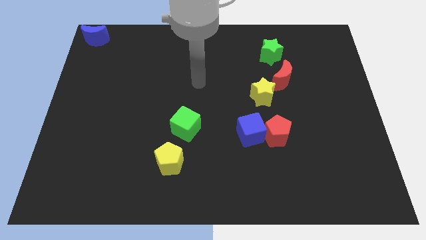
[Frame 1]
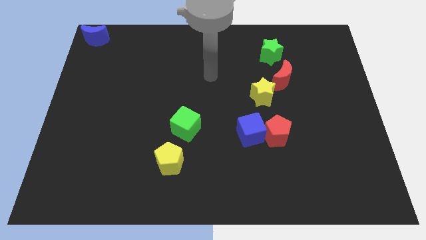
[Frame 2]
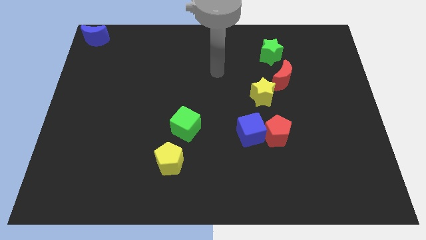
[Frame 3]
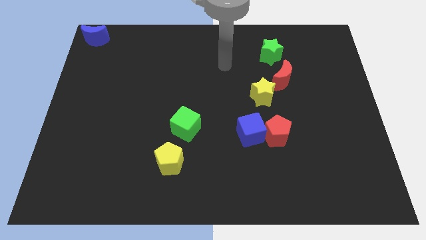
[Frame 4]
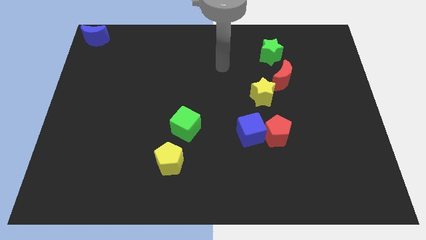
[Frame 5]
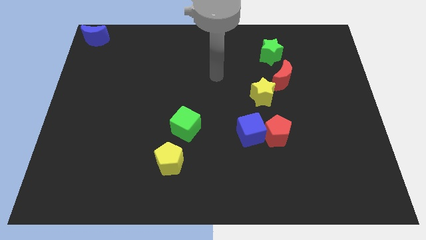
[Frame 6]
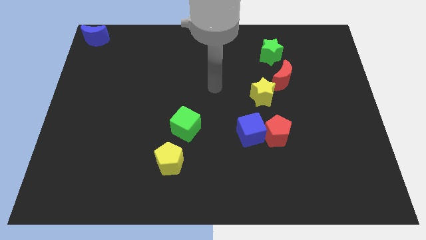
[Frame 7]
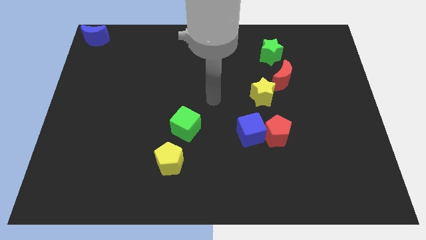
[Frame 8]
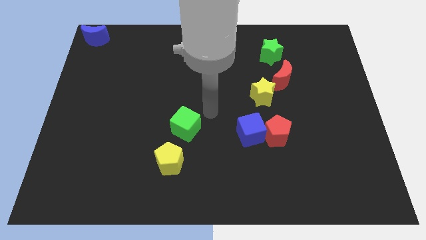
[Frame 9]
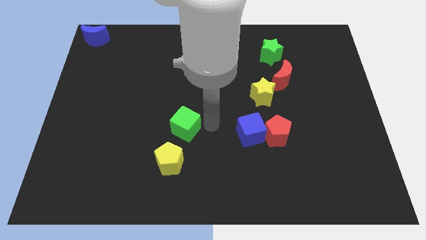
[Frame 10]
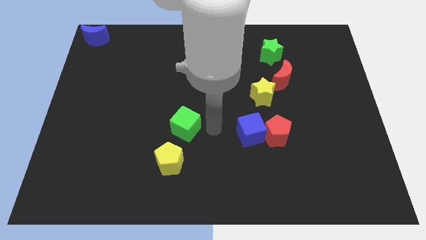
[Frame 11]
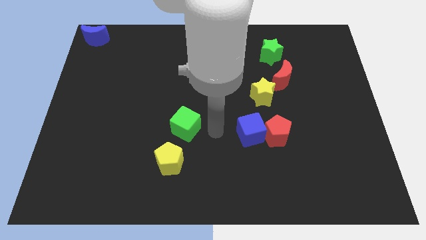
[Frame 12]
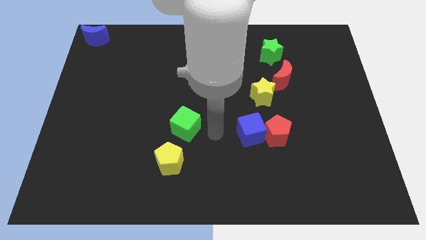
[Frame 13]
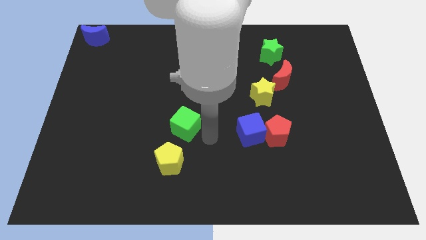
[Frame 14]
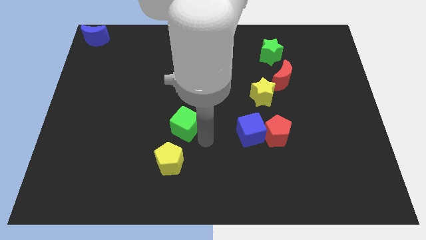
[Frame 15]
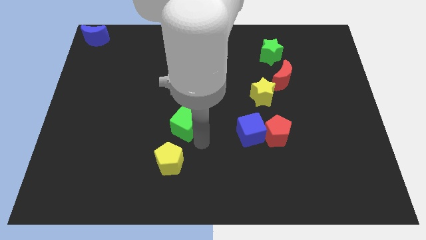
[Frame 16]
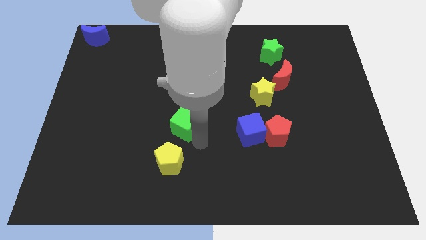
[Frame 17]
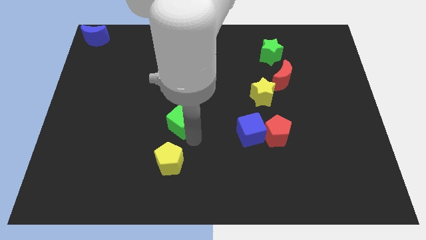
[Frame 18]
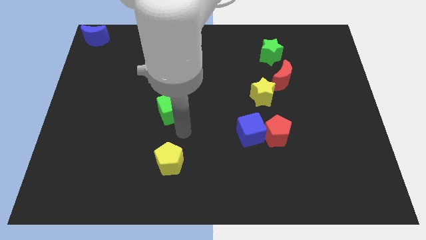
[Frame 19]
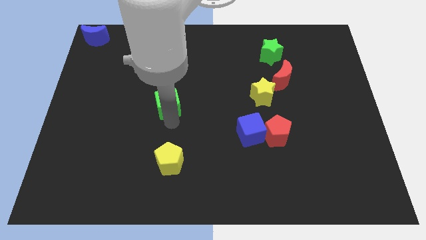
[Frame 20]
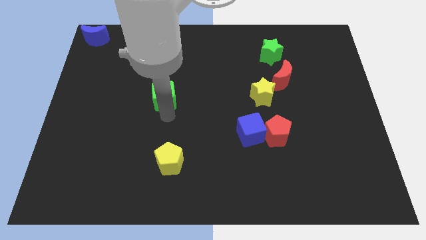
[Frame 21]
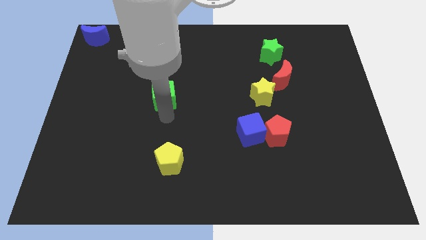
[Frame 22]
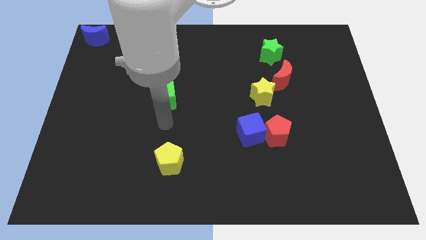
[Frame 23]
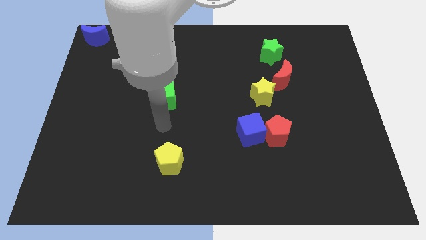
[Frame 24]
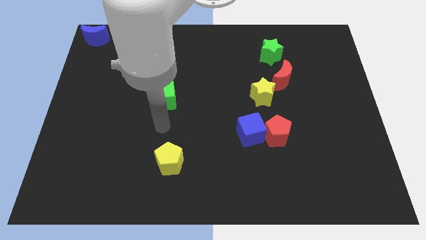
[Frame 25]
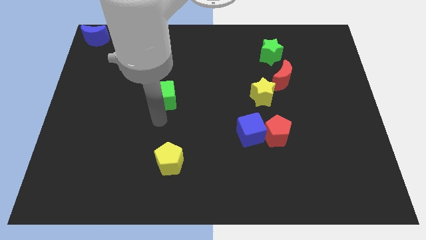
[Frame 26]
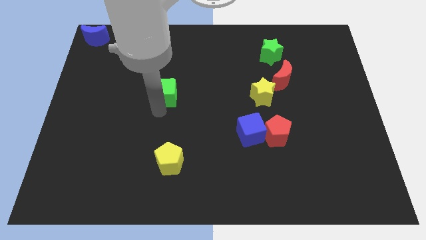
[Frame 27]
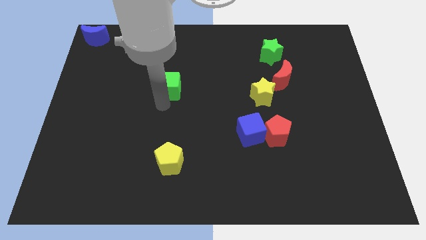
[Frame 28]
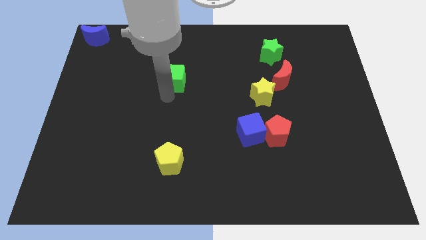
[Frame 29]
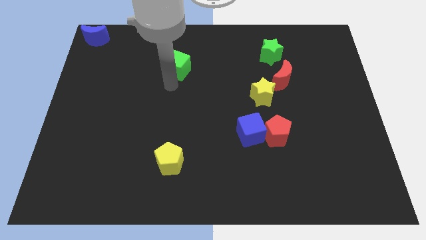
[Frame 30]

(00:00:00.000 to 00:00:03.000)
push the green cube to the top of the yellow pentagon

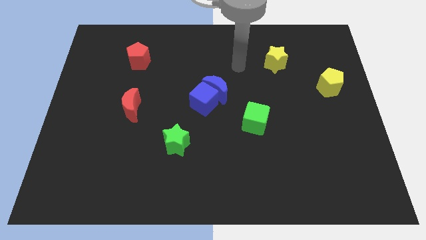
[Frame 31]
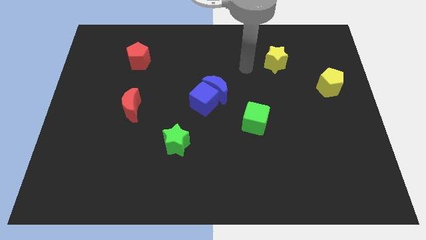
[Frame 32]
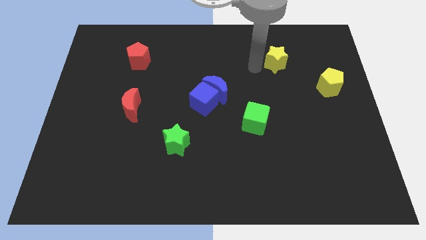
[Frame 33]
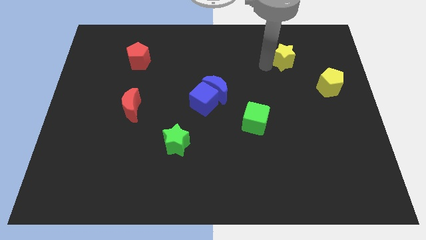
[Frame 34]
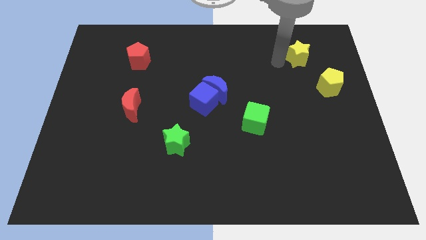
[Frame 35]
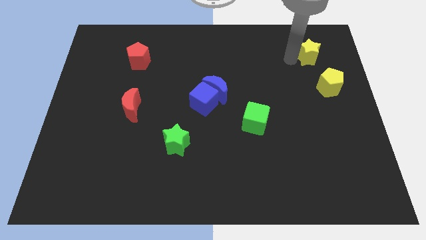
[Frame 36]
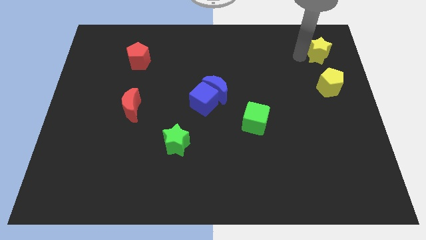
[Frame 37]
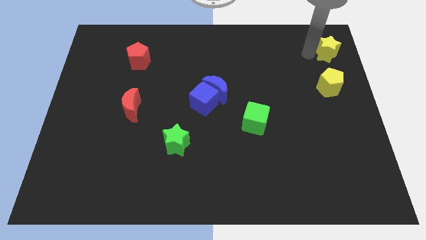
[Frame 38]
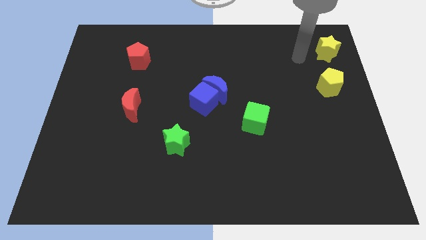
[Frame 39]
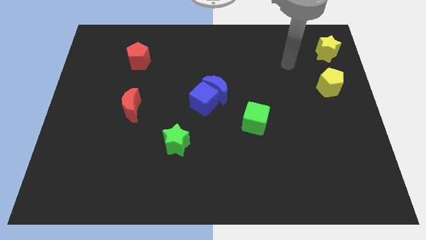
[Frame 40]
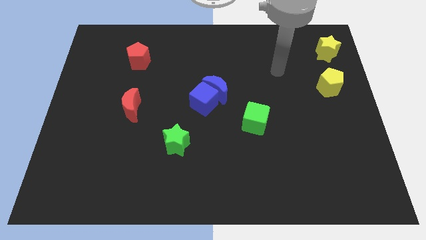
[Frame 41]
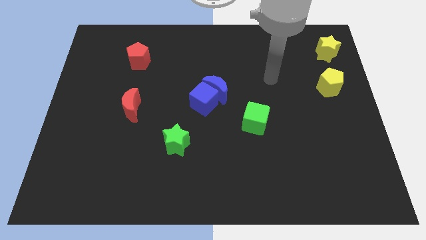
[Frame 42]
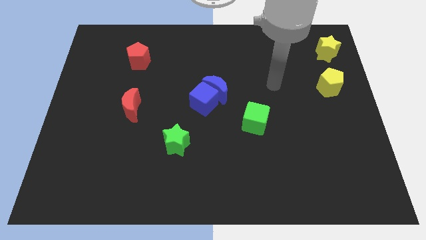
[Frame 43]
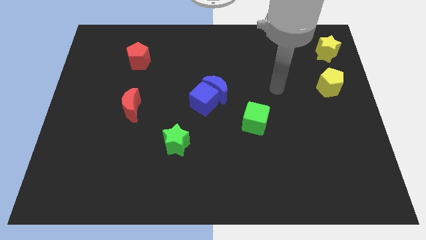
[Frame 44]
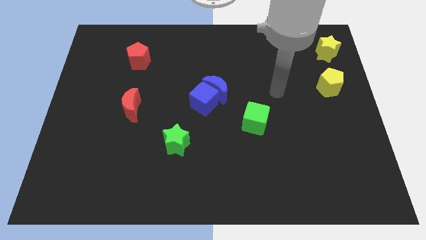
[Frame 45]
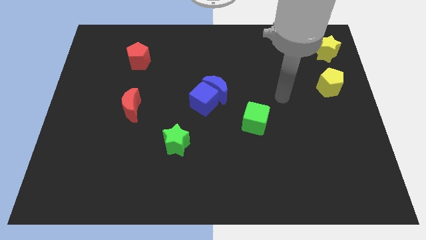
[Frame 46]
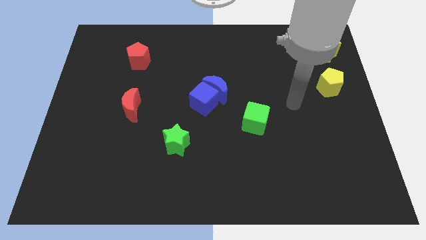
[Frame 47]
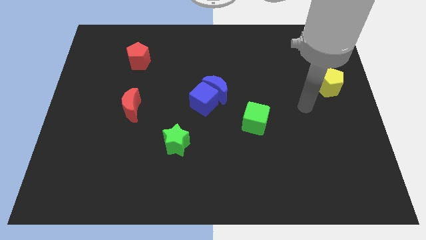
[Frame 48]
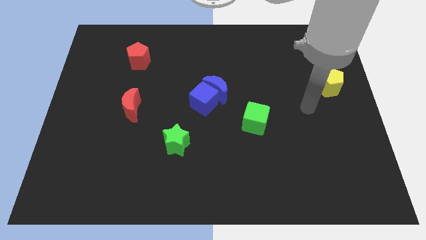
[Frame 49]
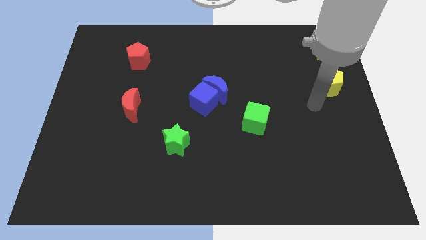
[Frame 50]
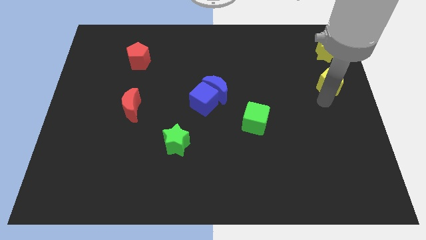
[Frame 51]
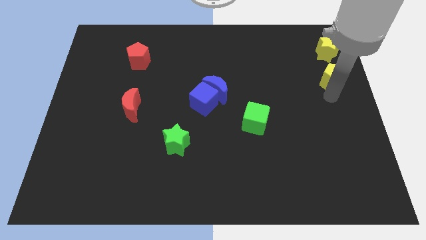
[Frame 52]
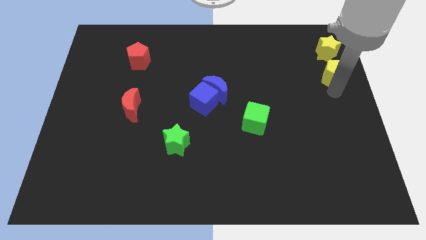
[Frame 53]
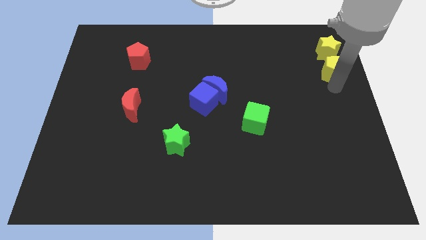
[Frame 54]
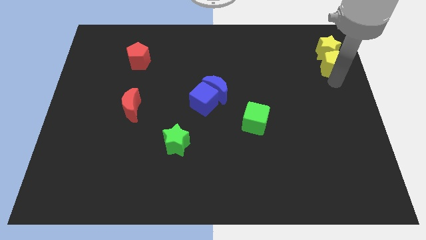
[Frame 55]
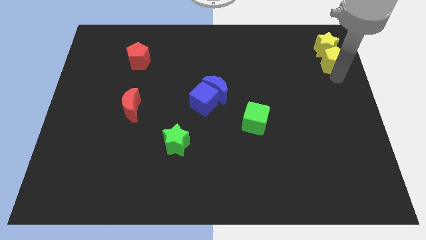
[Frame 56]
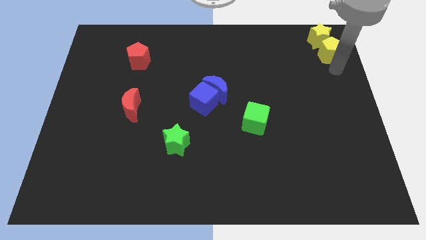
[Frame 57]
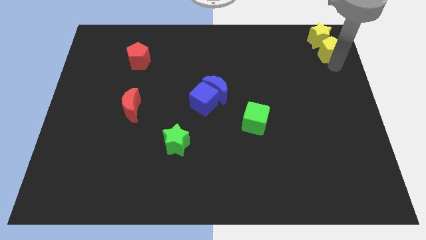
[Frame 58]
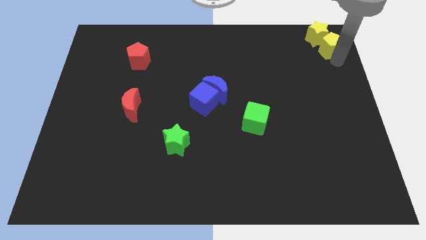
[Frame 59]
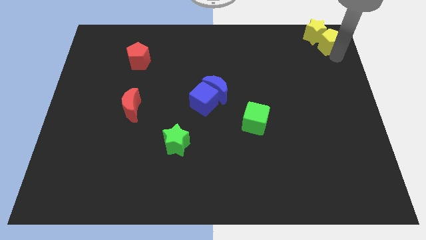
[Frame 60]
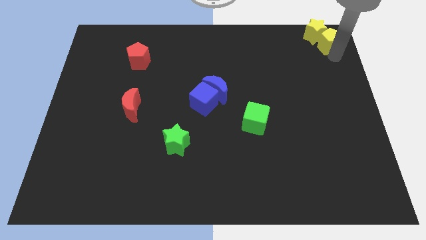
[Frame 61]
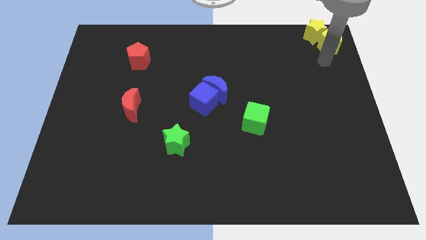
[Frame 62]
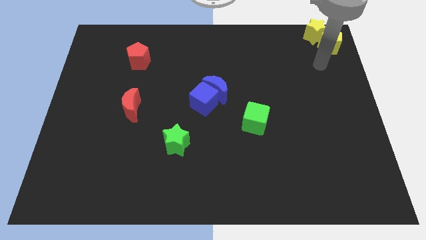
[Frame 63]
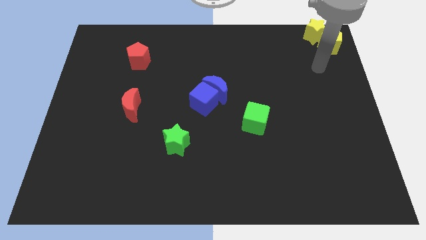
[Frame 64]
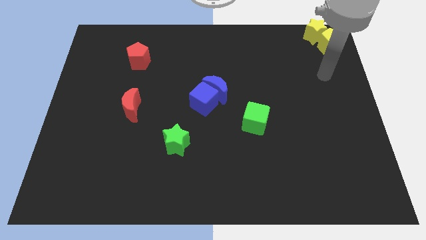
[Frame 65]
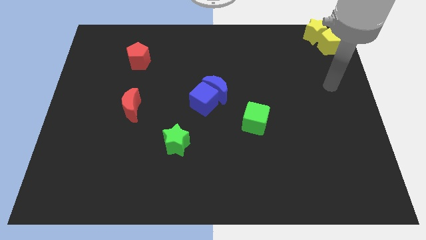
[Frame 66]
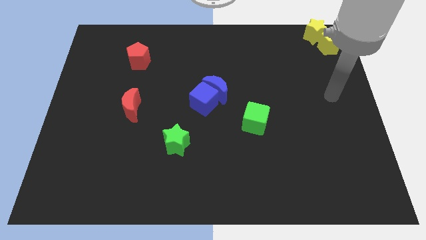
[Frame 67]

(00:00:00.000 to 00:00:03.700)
make the yellow blocks together at the top right corner of the board

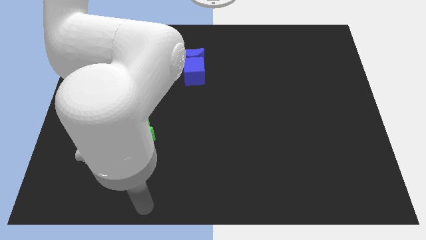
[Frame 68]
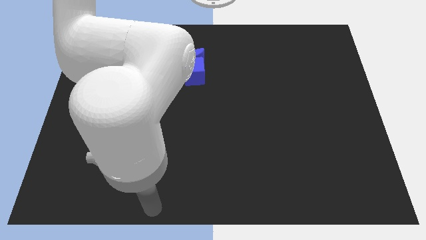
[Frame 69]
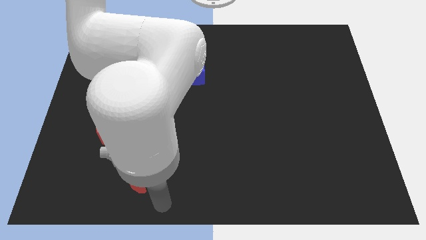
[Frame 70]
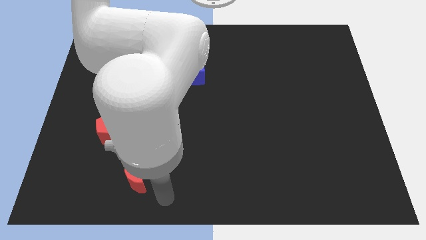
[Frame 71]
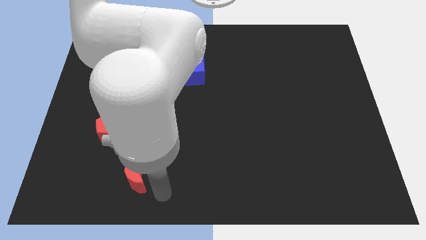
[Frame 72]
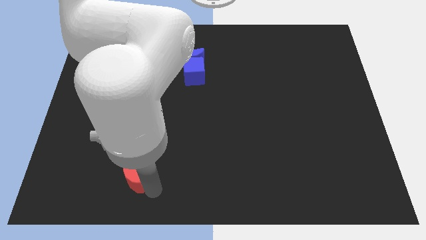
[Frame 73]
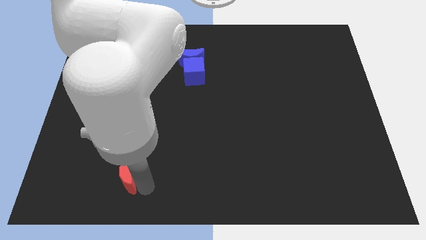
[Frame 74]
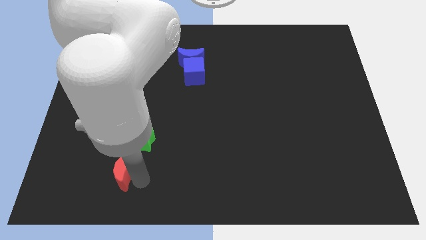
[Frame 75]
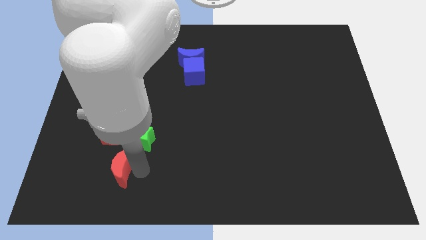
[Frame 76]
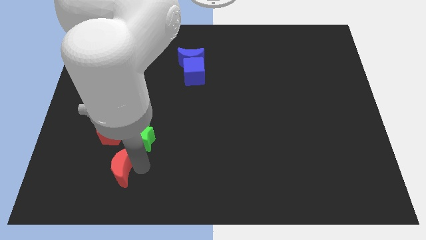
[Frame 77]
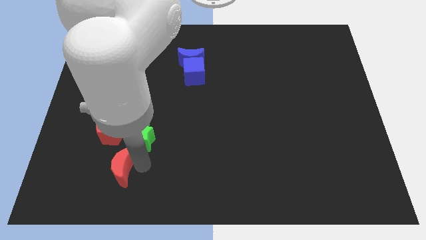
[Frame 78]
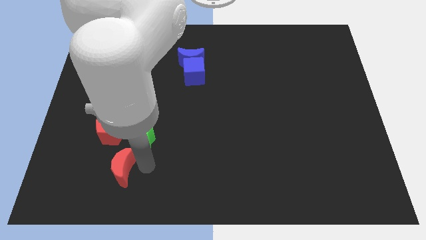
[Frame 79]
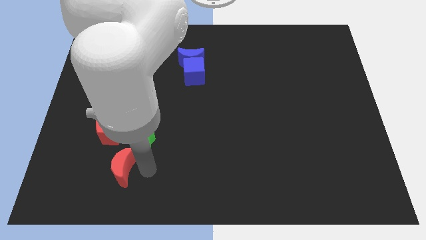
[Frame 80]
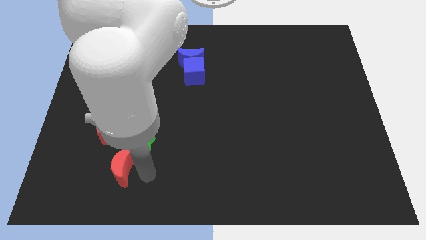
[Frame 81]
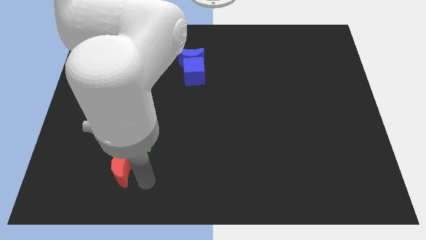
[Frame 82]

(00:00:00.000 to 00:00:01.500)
place the red crescent below the green star

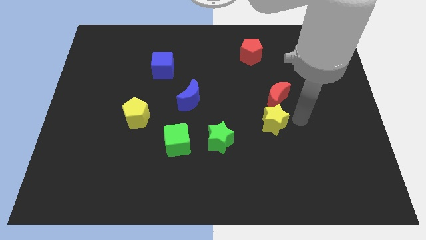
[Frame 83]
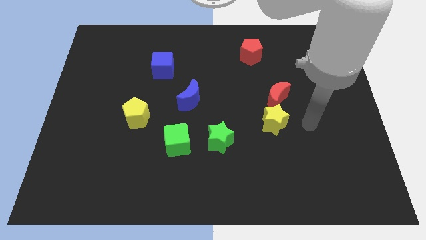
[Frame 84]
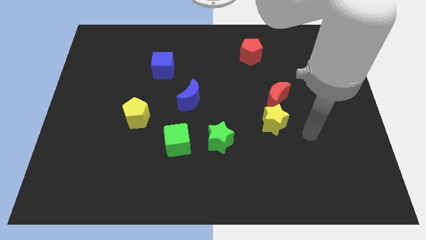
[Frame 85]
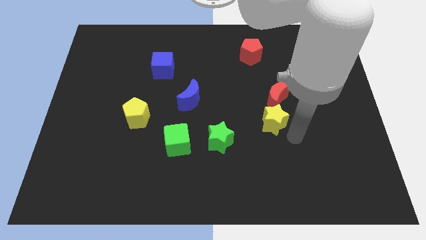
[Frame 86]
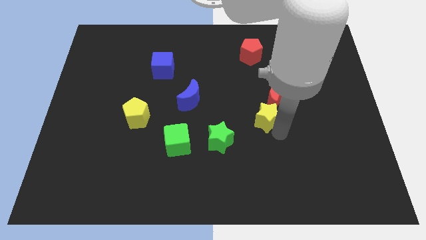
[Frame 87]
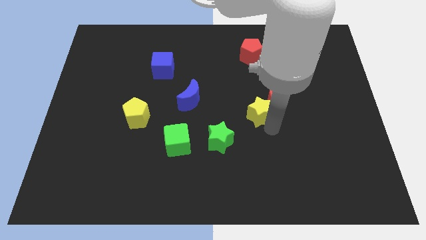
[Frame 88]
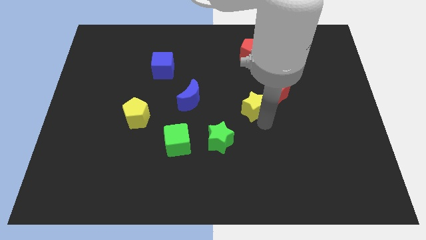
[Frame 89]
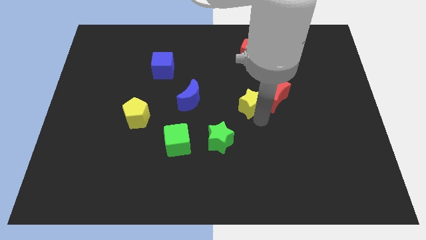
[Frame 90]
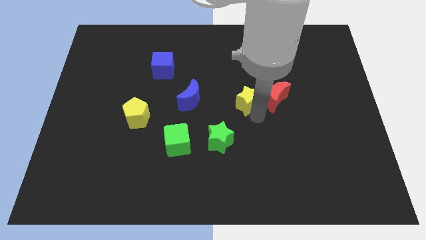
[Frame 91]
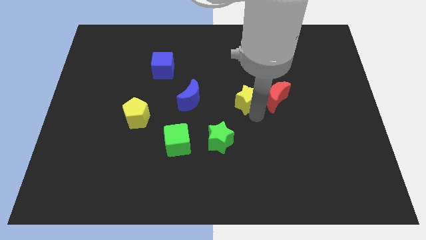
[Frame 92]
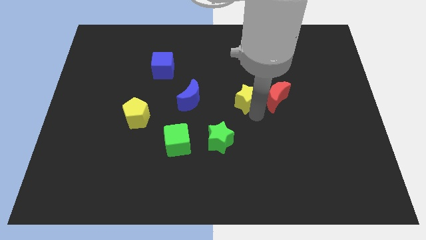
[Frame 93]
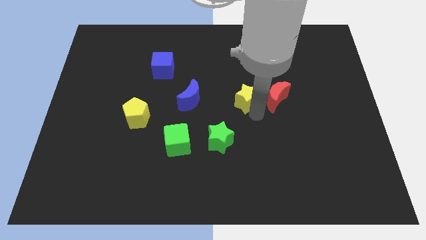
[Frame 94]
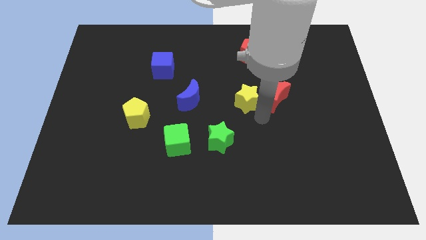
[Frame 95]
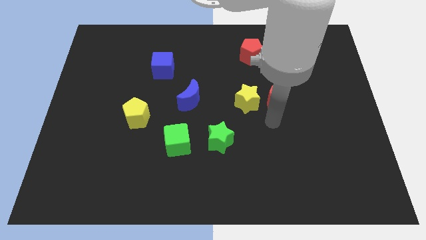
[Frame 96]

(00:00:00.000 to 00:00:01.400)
push the yellow star left to the red crescent
